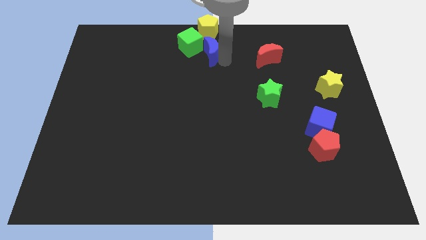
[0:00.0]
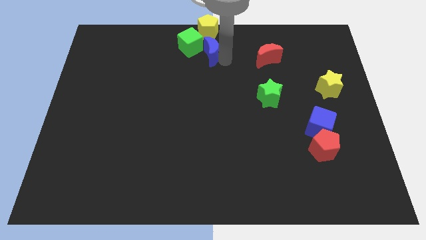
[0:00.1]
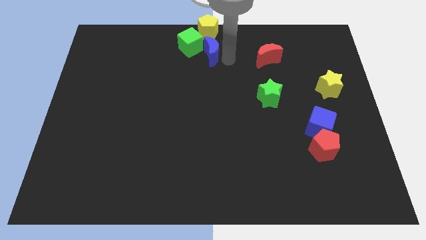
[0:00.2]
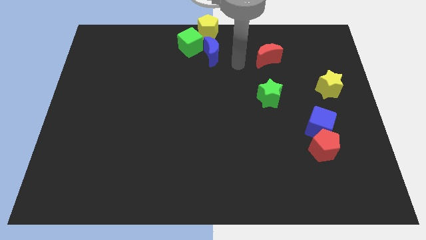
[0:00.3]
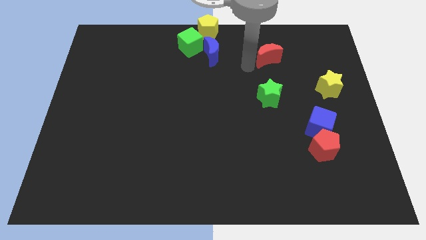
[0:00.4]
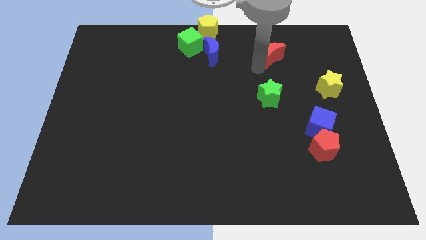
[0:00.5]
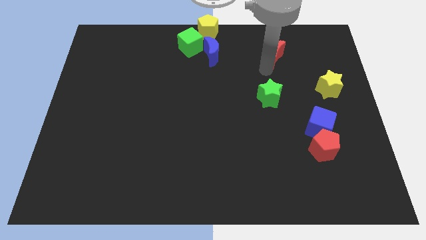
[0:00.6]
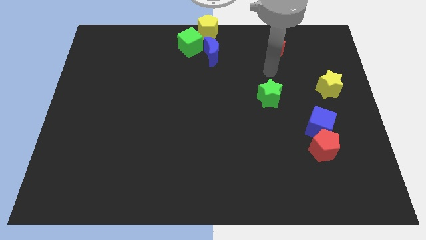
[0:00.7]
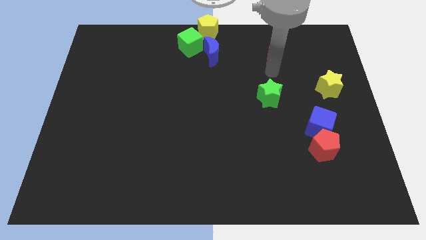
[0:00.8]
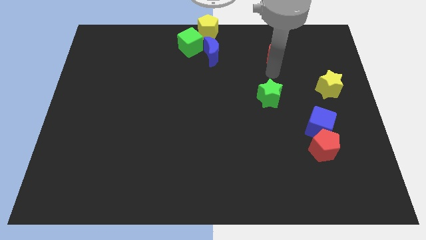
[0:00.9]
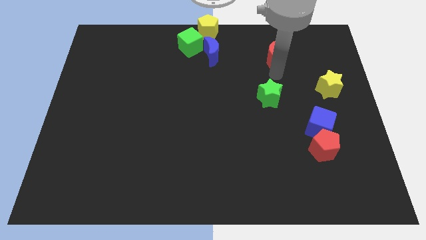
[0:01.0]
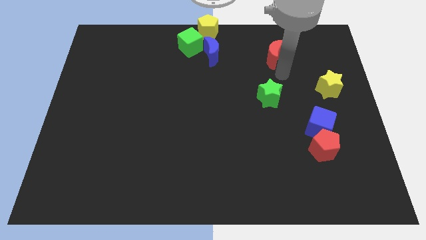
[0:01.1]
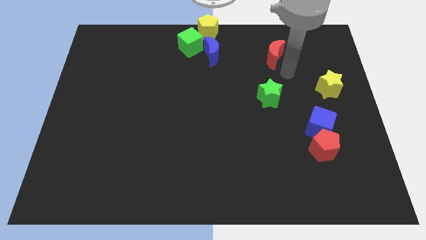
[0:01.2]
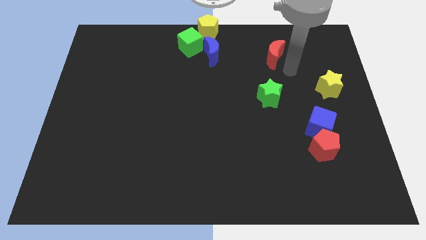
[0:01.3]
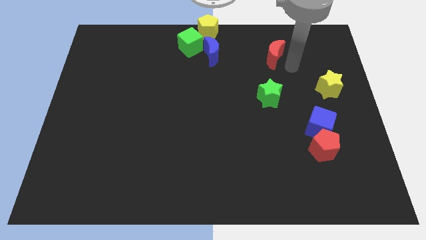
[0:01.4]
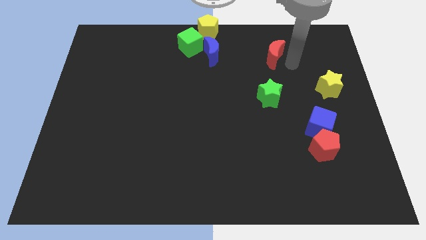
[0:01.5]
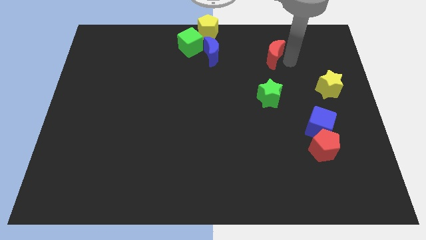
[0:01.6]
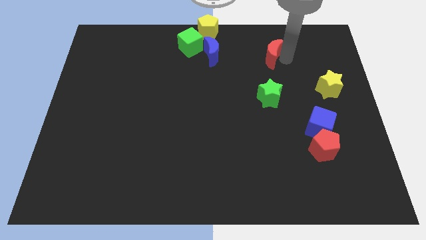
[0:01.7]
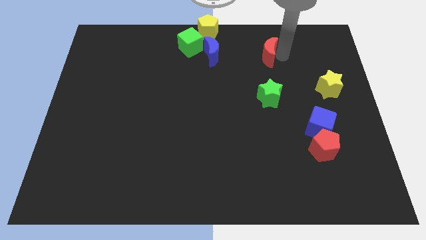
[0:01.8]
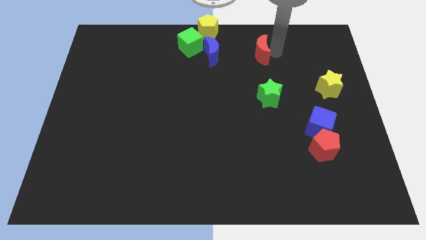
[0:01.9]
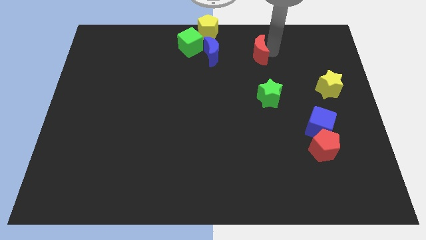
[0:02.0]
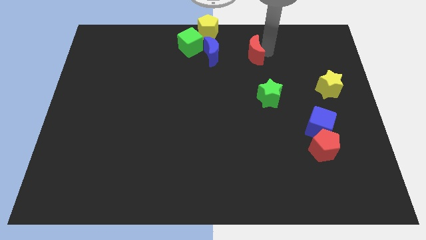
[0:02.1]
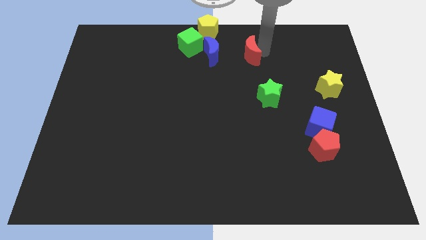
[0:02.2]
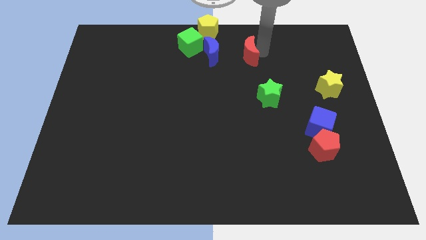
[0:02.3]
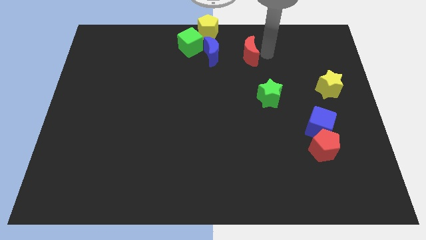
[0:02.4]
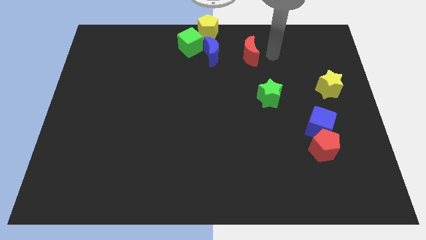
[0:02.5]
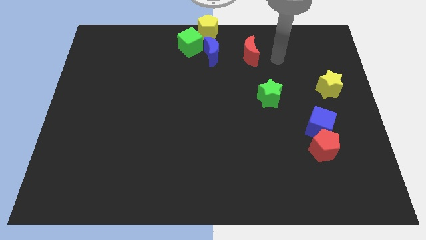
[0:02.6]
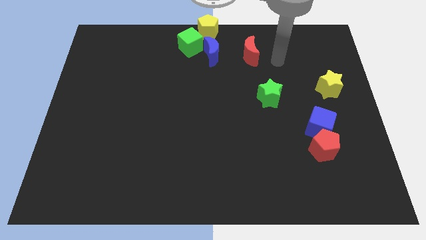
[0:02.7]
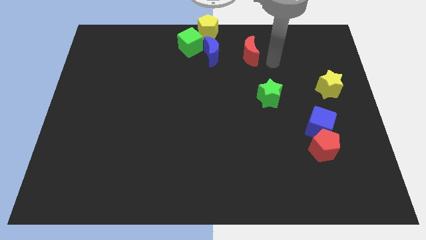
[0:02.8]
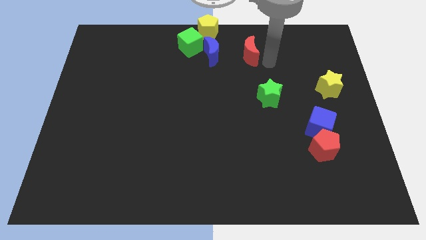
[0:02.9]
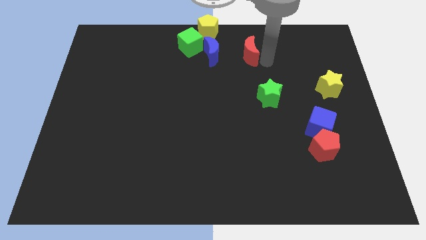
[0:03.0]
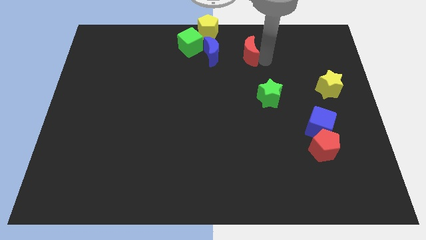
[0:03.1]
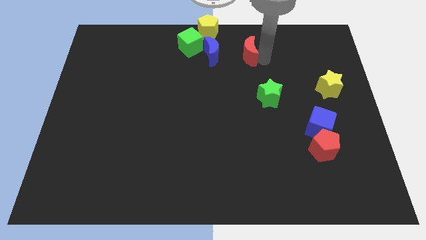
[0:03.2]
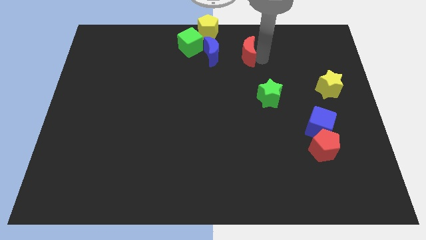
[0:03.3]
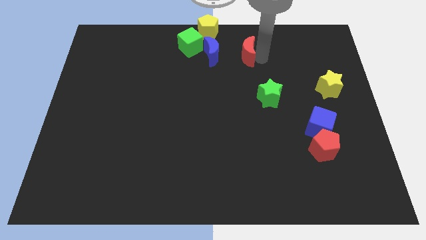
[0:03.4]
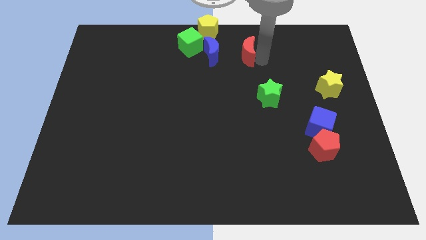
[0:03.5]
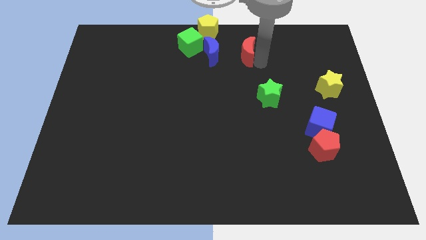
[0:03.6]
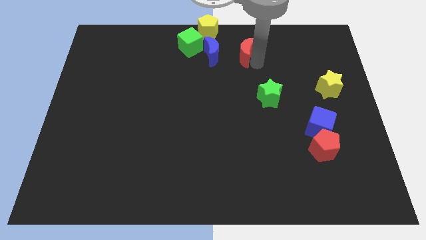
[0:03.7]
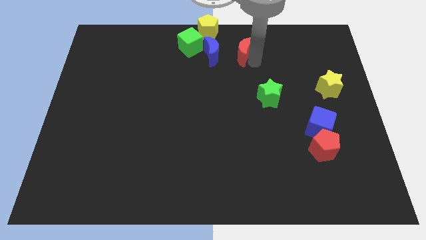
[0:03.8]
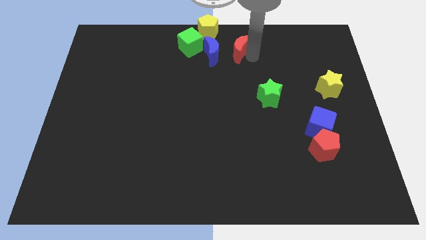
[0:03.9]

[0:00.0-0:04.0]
push the red moon parallel to the blue moon

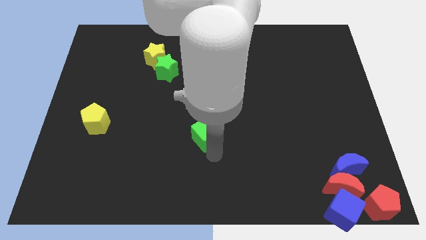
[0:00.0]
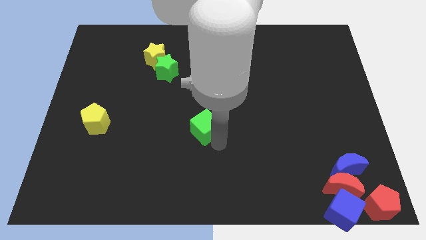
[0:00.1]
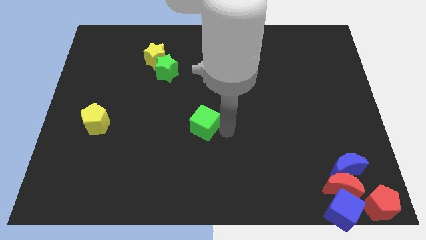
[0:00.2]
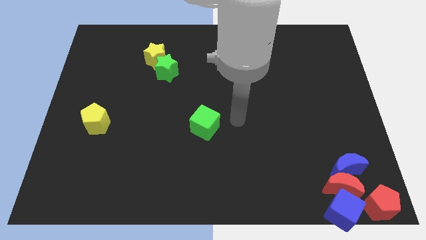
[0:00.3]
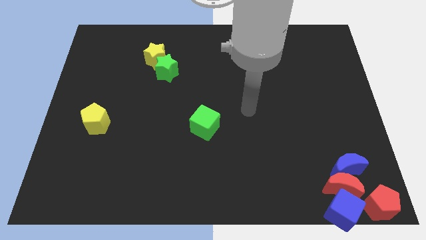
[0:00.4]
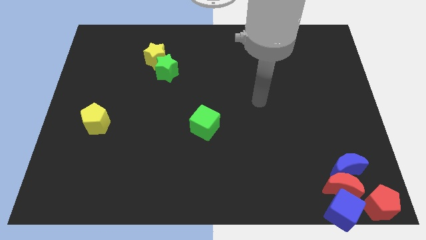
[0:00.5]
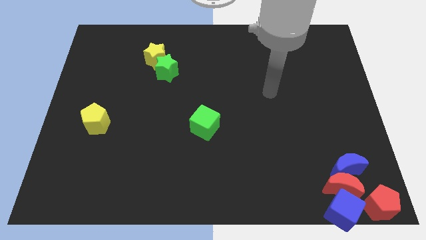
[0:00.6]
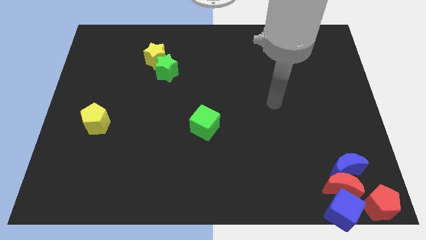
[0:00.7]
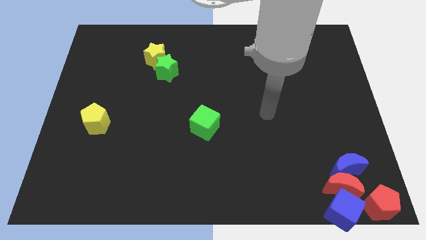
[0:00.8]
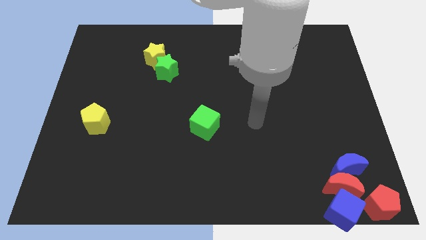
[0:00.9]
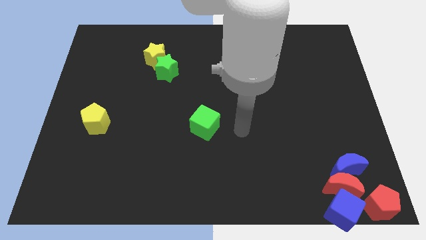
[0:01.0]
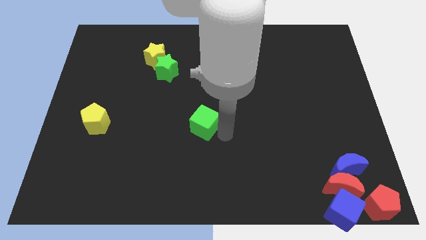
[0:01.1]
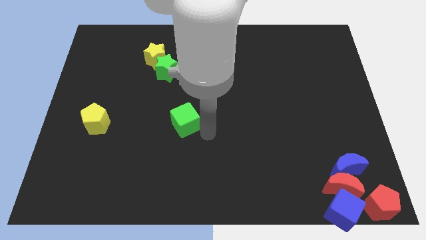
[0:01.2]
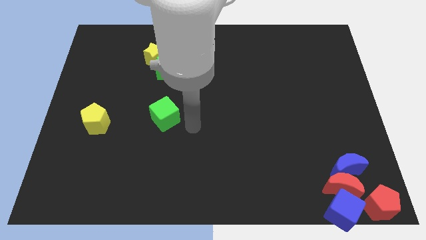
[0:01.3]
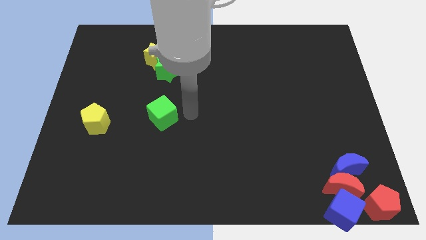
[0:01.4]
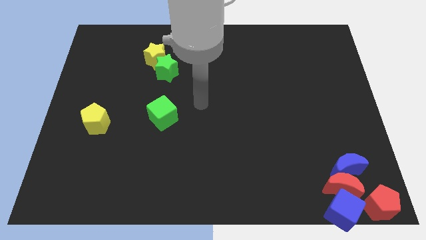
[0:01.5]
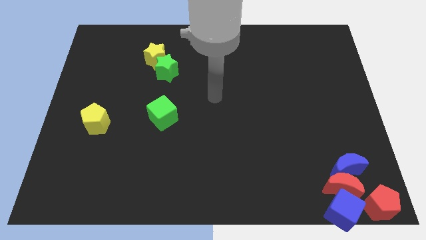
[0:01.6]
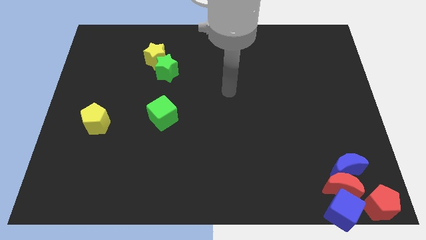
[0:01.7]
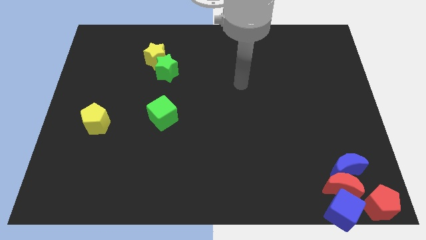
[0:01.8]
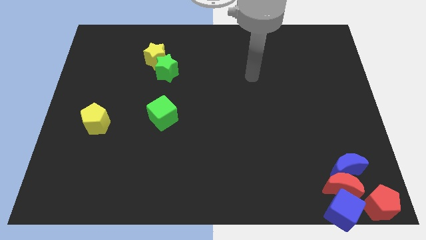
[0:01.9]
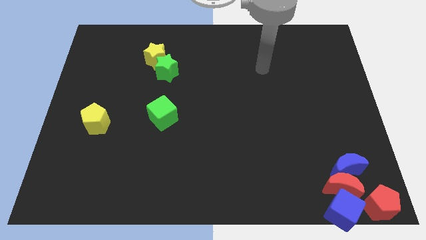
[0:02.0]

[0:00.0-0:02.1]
place the green cube vertically below the green star

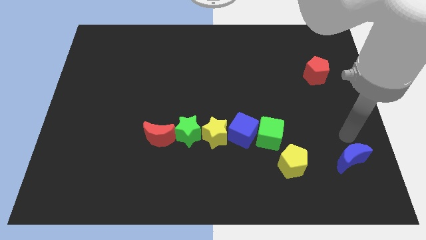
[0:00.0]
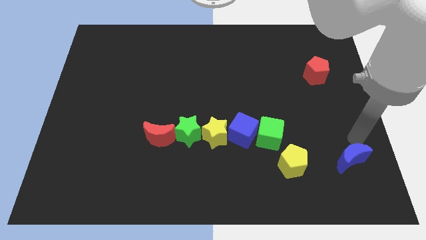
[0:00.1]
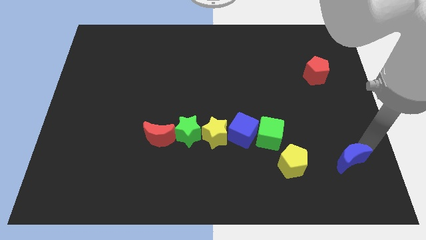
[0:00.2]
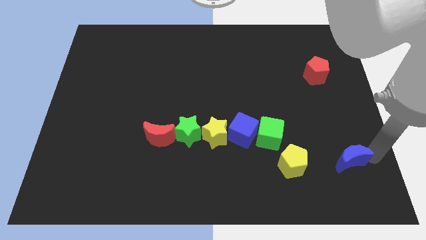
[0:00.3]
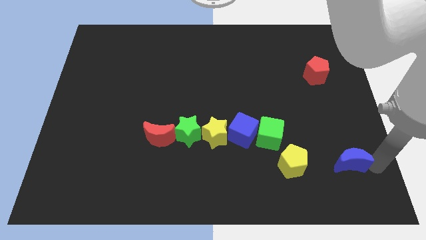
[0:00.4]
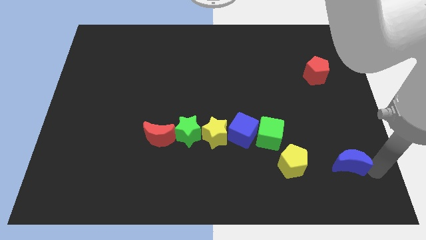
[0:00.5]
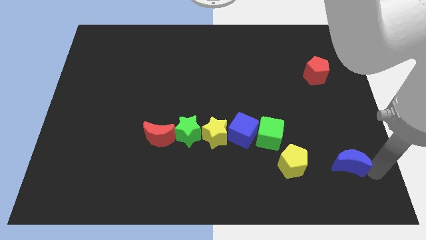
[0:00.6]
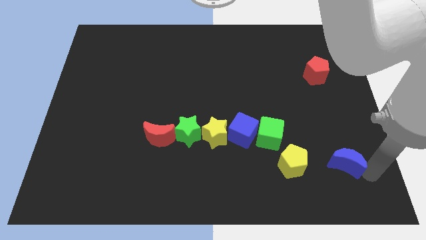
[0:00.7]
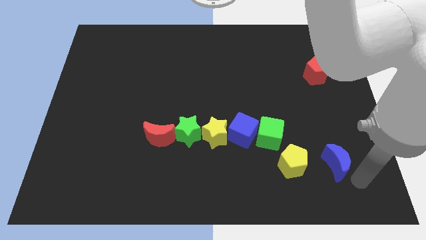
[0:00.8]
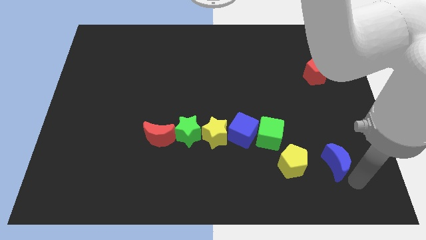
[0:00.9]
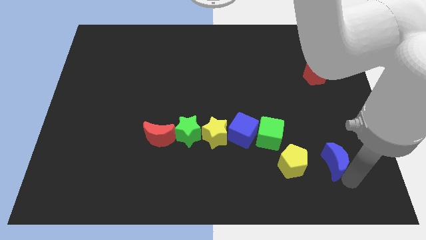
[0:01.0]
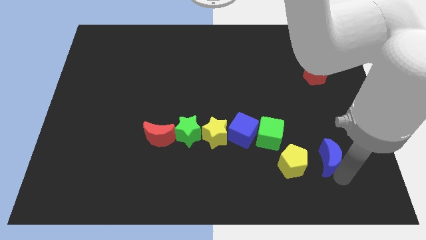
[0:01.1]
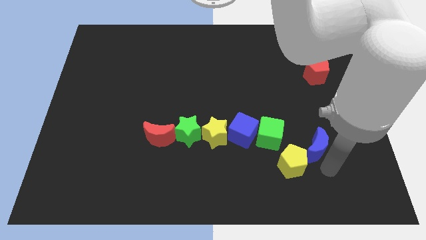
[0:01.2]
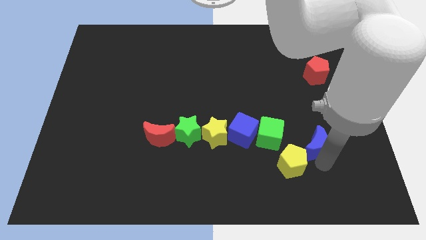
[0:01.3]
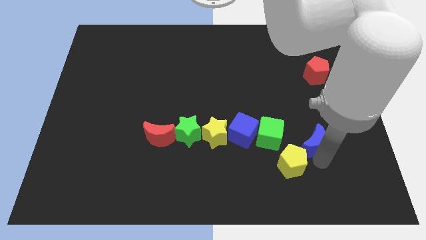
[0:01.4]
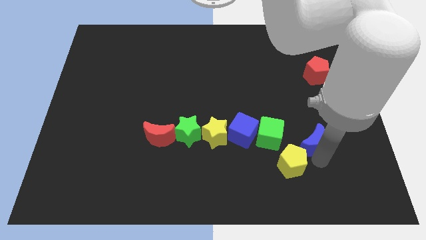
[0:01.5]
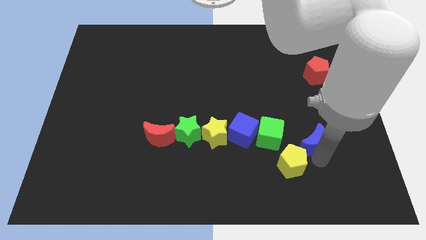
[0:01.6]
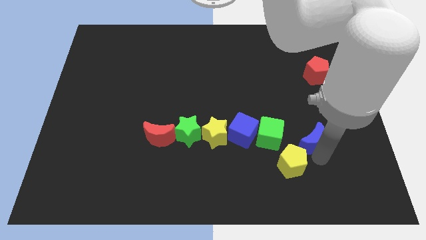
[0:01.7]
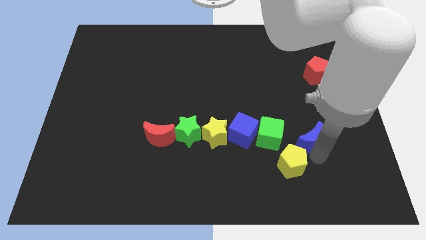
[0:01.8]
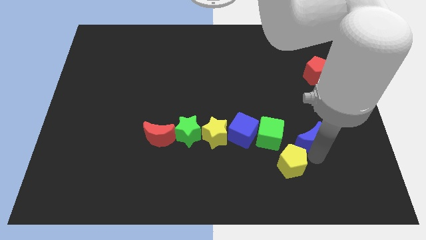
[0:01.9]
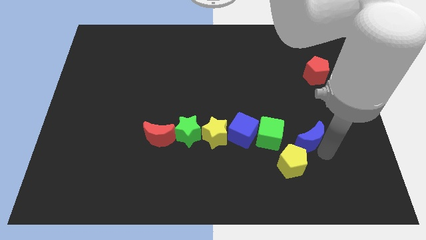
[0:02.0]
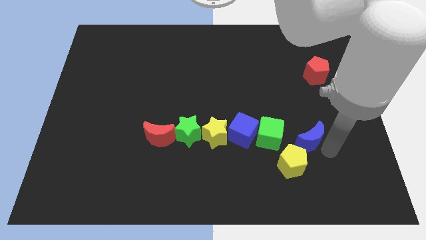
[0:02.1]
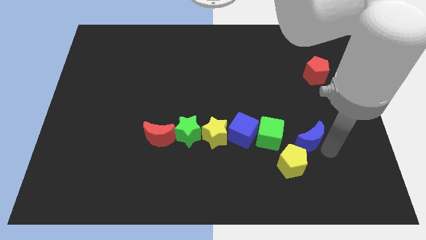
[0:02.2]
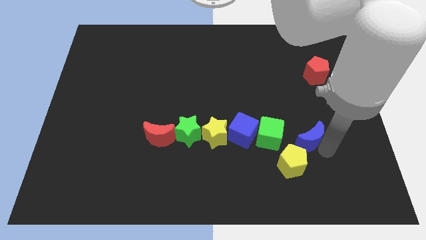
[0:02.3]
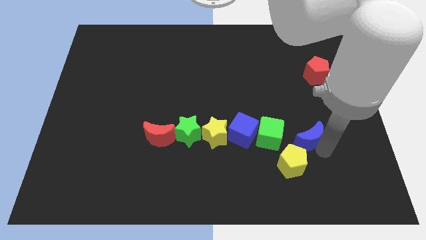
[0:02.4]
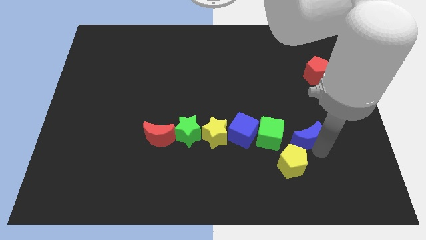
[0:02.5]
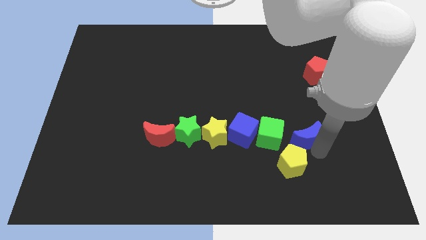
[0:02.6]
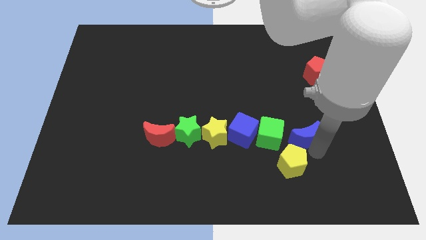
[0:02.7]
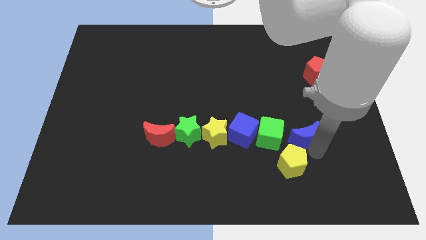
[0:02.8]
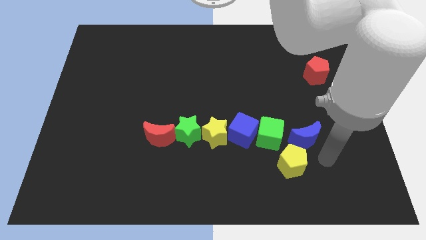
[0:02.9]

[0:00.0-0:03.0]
move the blue moon to the right of the green cube
